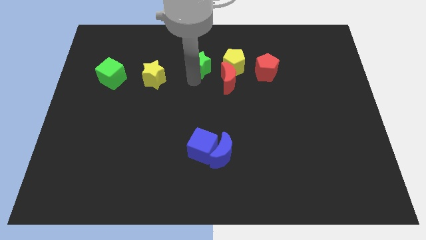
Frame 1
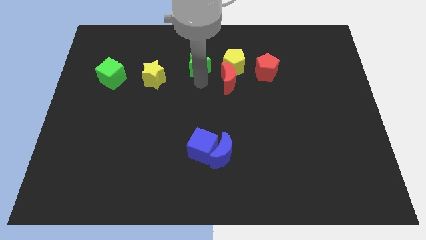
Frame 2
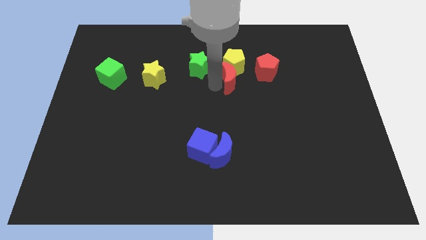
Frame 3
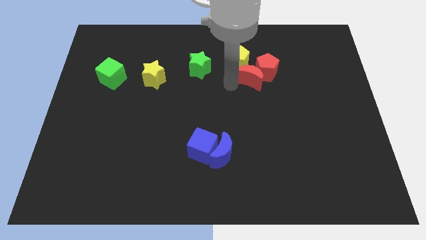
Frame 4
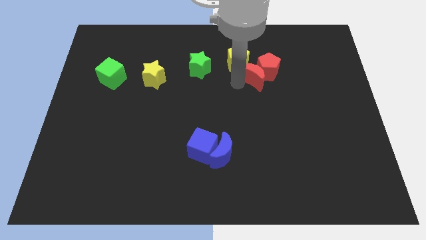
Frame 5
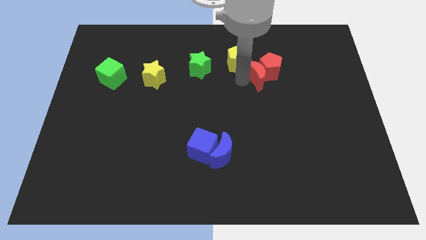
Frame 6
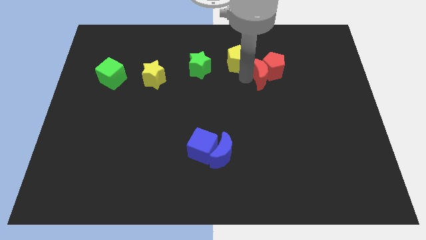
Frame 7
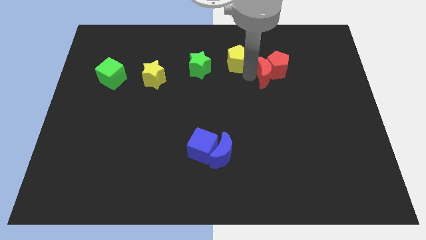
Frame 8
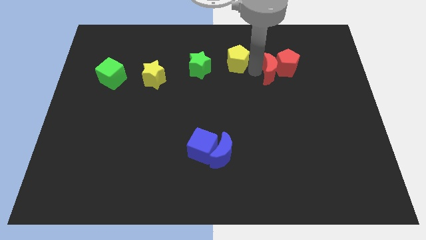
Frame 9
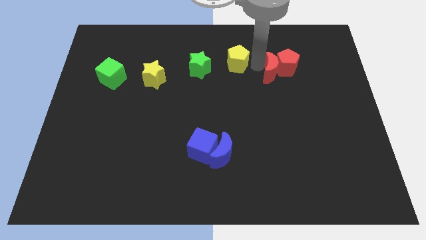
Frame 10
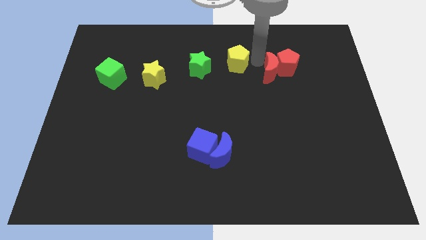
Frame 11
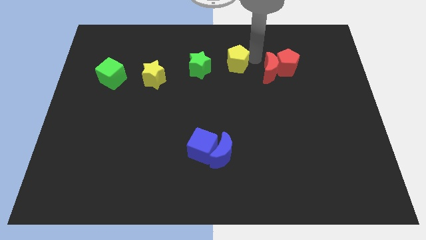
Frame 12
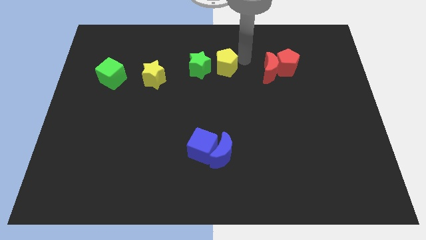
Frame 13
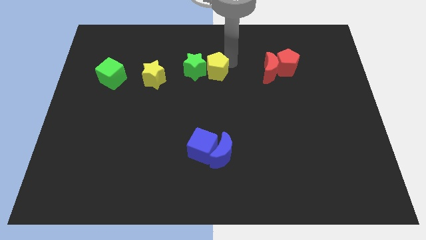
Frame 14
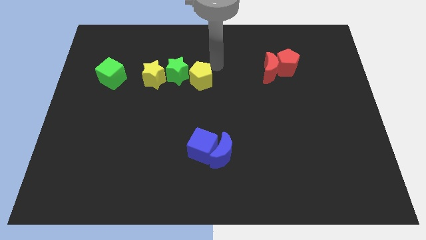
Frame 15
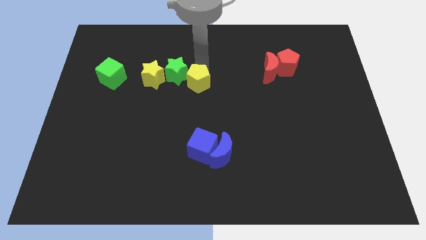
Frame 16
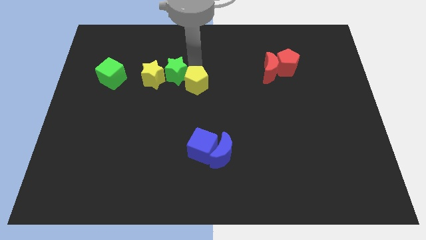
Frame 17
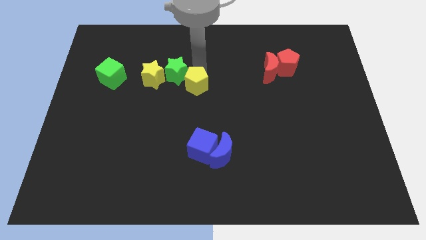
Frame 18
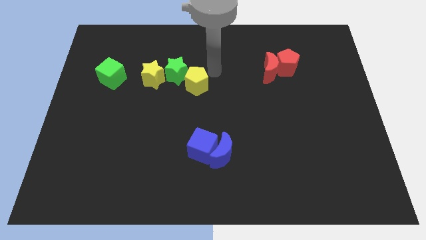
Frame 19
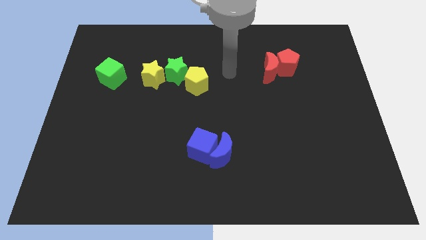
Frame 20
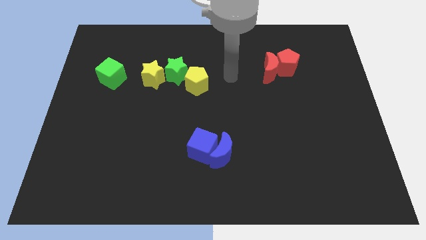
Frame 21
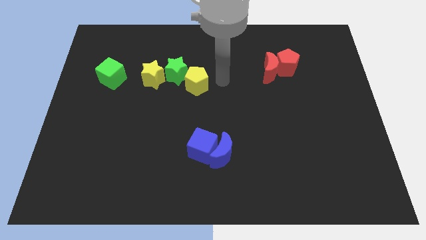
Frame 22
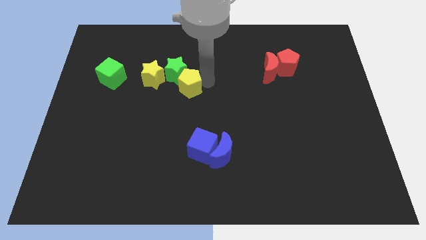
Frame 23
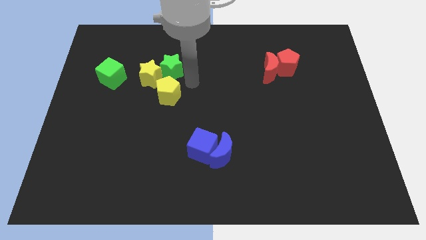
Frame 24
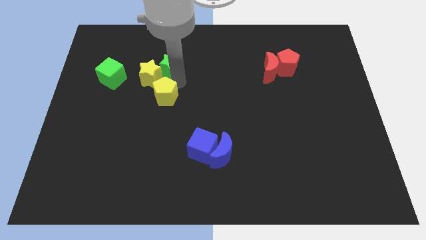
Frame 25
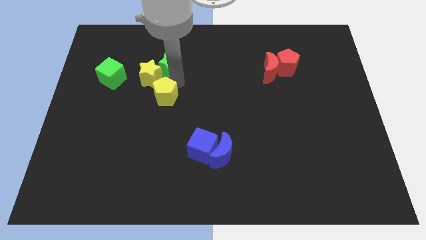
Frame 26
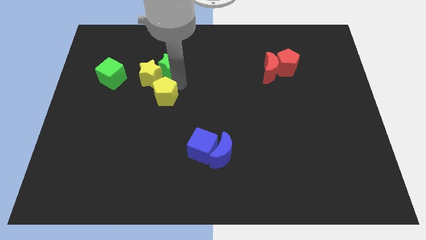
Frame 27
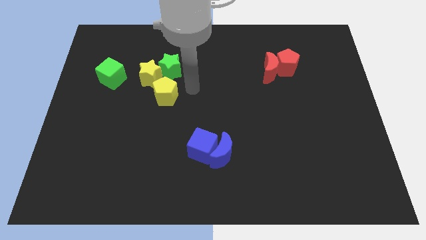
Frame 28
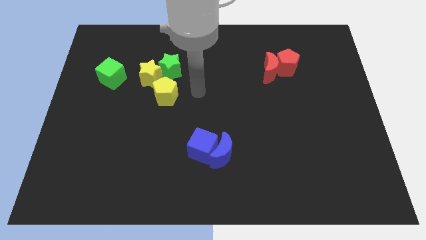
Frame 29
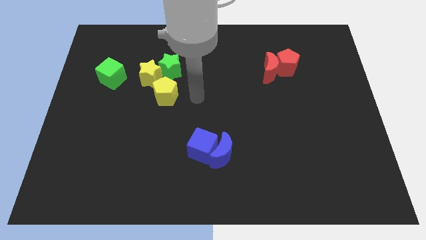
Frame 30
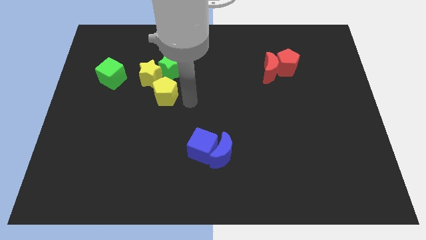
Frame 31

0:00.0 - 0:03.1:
slide the yellow pentagon and green star into the yellow star

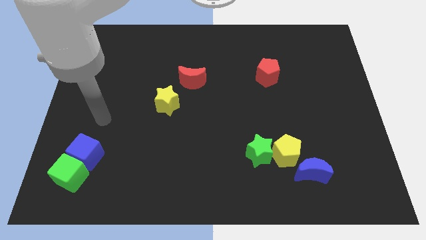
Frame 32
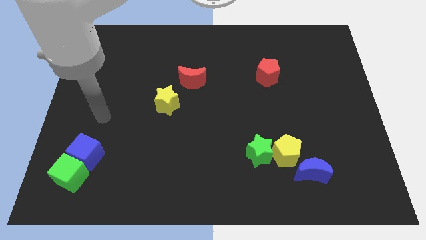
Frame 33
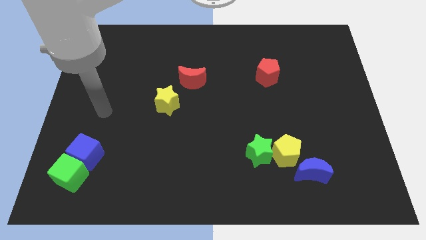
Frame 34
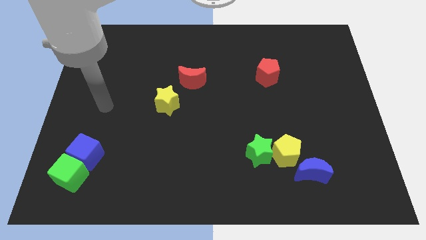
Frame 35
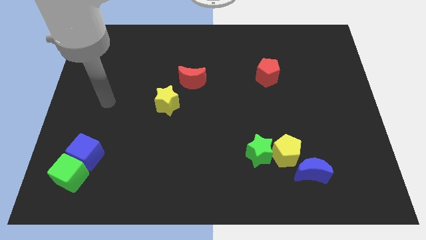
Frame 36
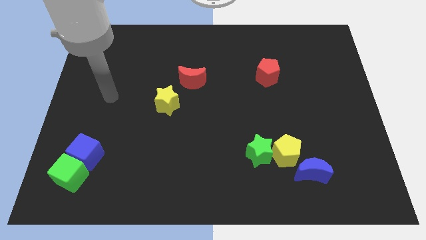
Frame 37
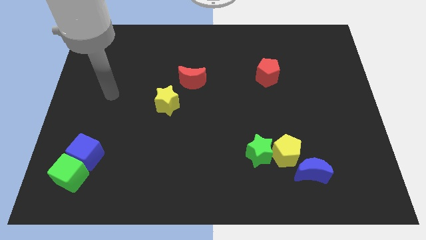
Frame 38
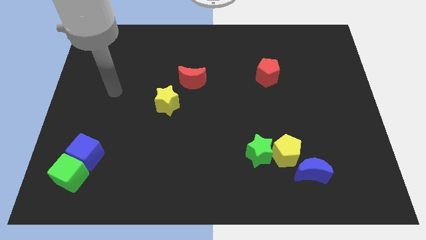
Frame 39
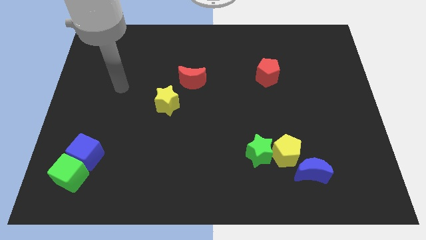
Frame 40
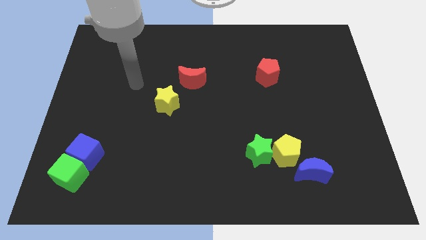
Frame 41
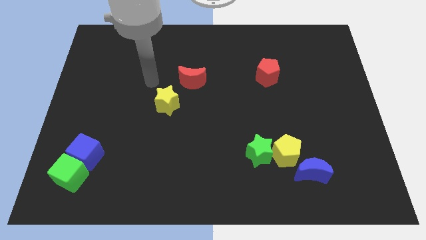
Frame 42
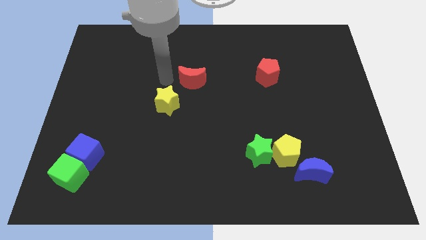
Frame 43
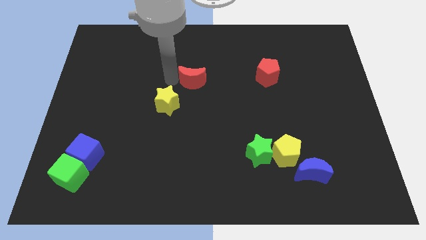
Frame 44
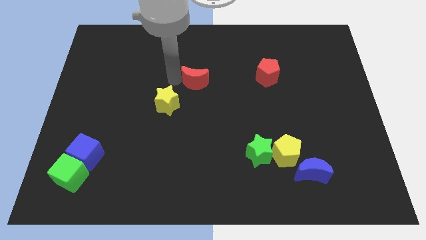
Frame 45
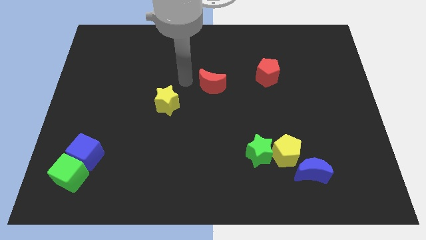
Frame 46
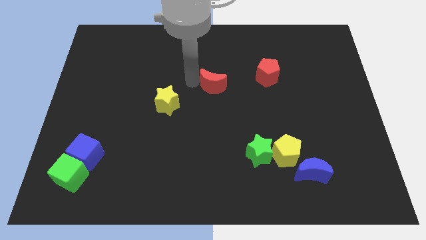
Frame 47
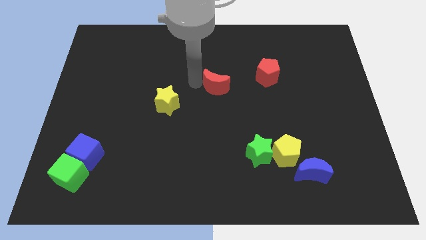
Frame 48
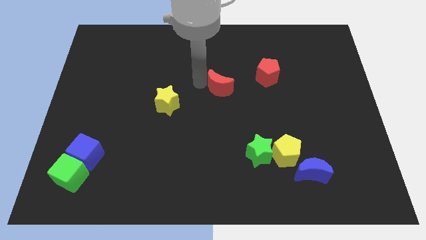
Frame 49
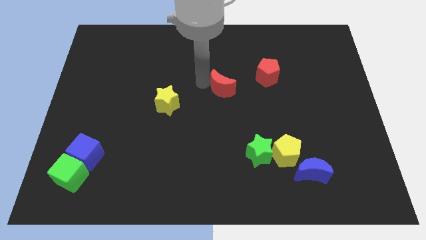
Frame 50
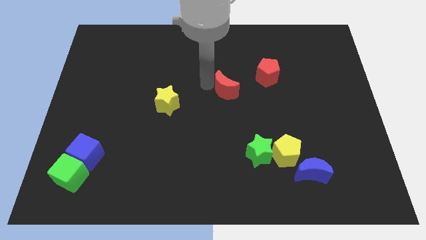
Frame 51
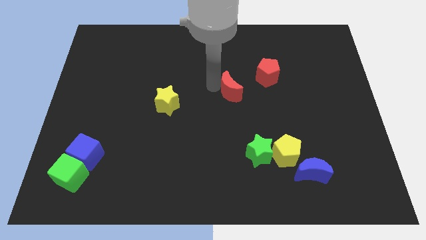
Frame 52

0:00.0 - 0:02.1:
move the red crescent towards the red pentagon

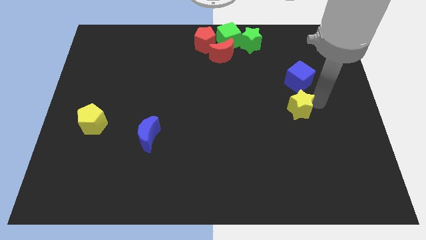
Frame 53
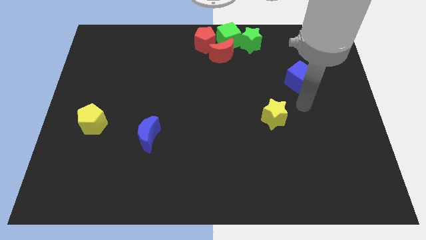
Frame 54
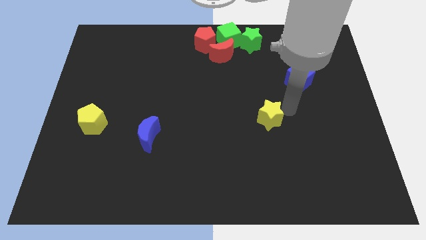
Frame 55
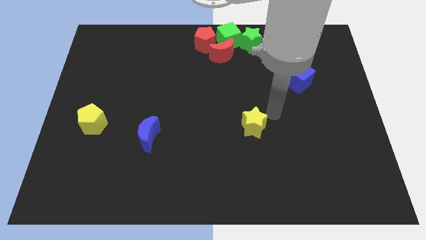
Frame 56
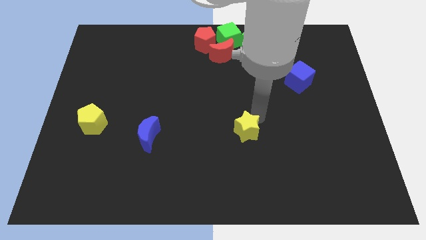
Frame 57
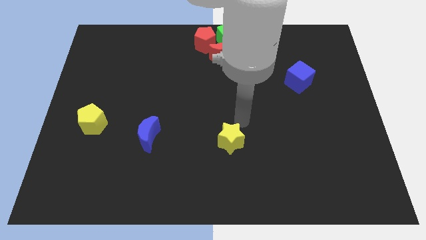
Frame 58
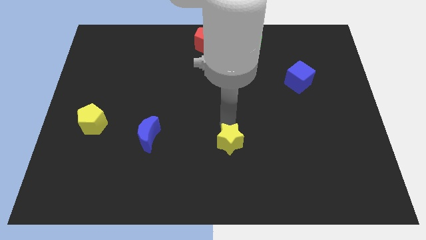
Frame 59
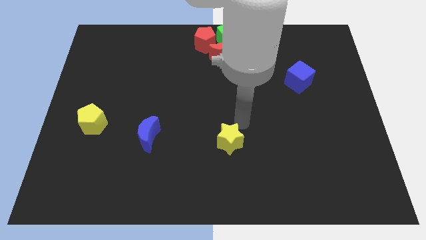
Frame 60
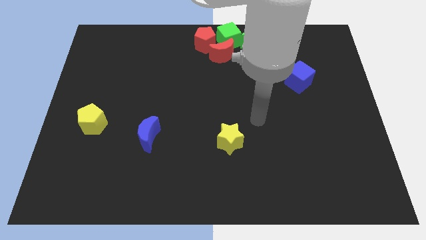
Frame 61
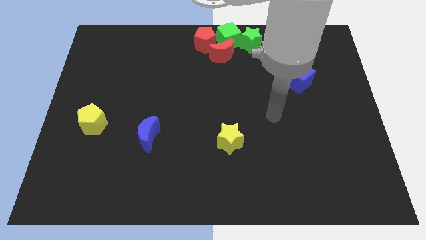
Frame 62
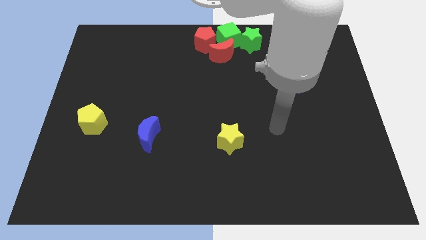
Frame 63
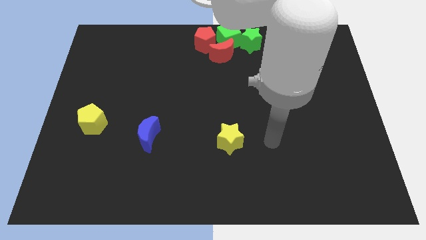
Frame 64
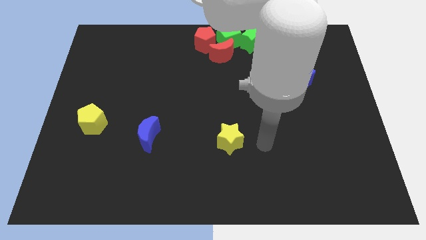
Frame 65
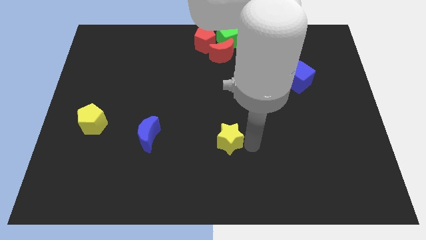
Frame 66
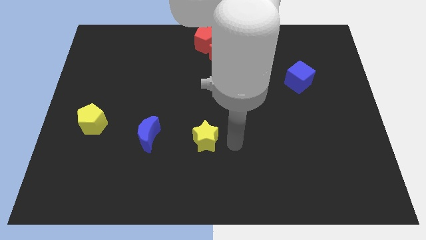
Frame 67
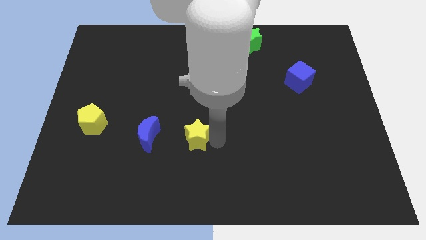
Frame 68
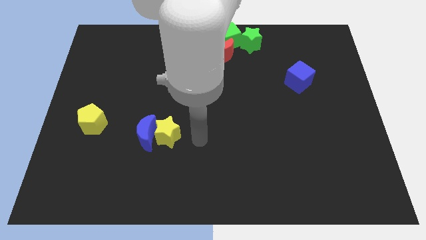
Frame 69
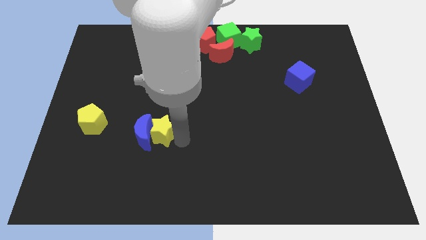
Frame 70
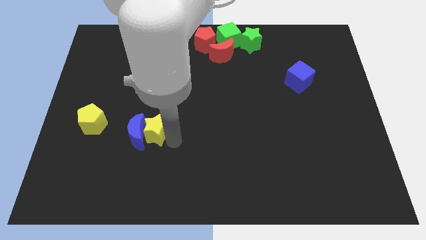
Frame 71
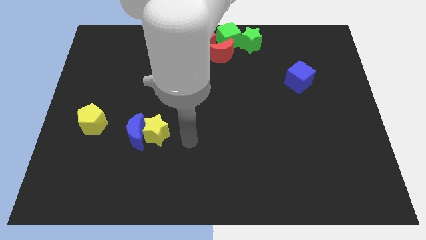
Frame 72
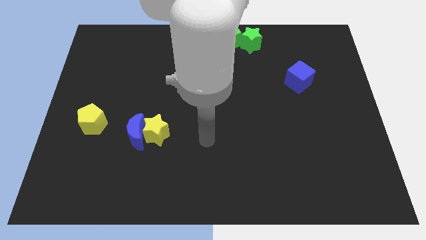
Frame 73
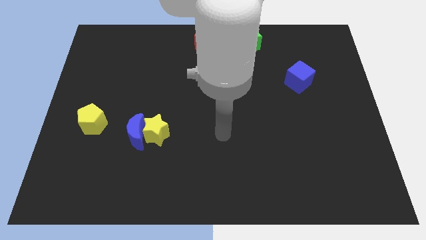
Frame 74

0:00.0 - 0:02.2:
push yellow star into blue moon

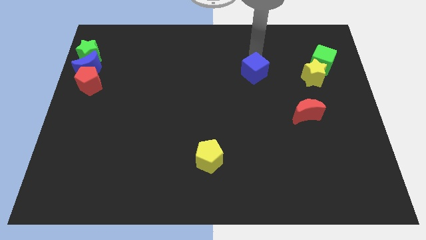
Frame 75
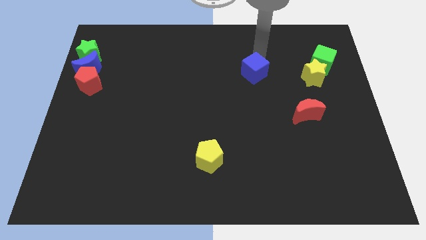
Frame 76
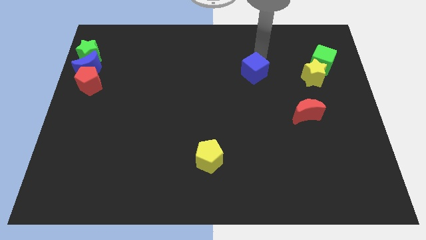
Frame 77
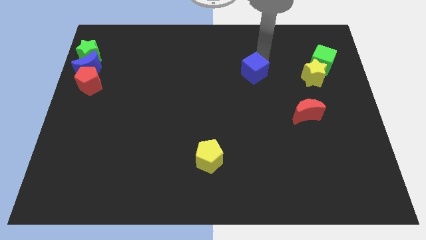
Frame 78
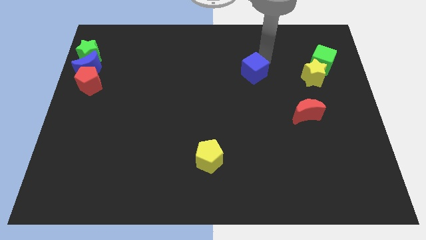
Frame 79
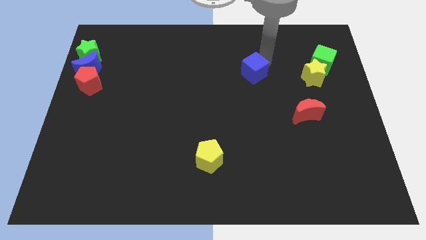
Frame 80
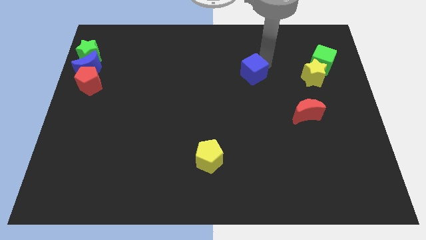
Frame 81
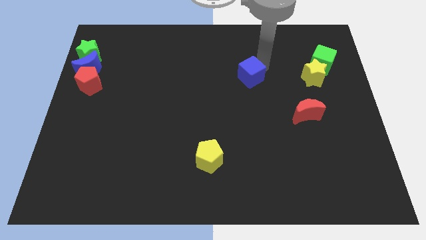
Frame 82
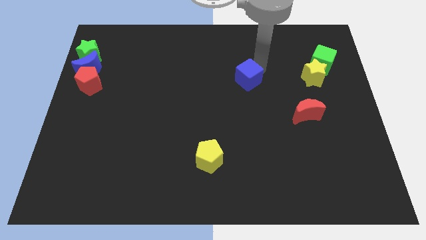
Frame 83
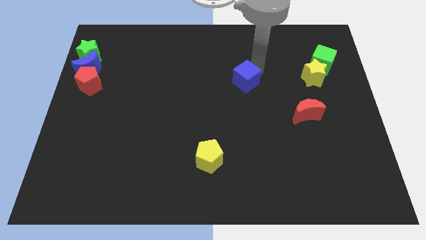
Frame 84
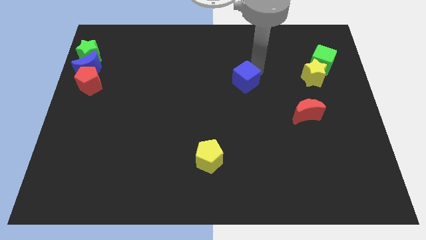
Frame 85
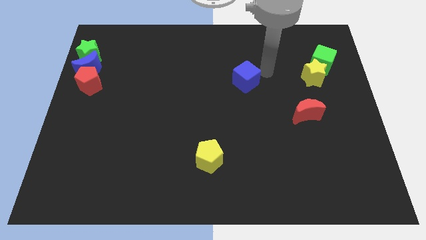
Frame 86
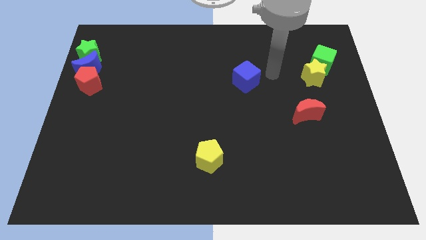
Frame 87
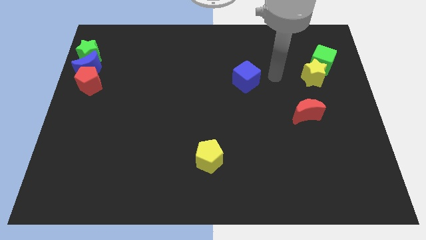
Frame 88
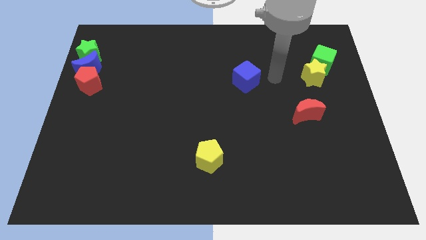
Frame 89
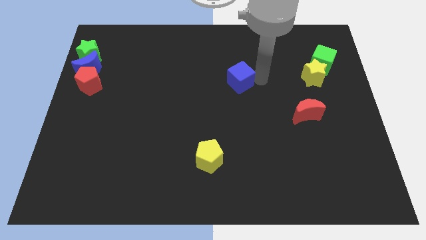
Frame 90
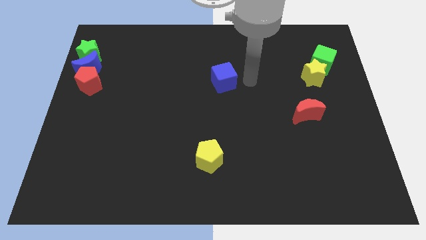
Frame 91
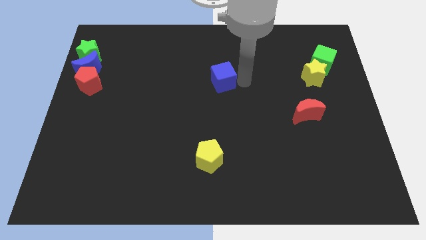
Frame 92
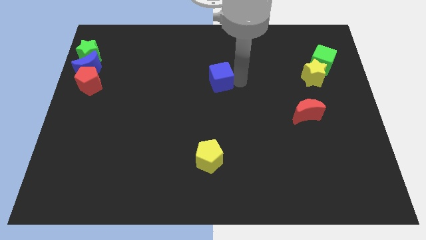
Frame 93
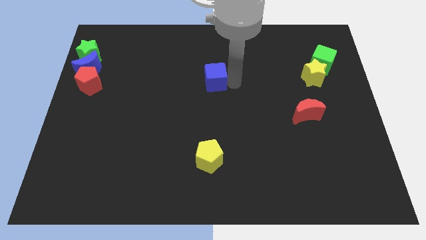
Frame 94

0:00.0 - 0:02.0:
place the blue cube vertically above the yellow pentagon
